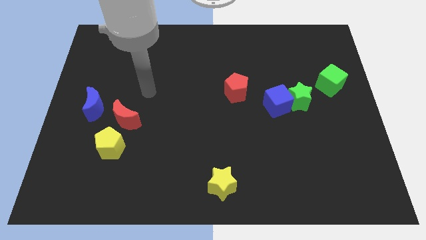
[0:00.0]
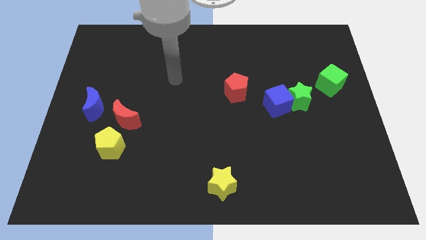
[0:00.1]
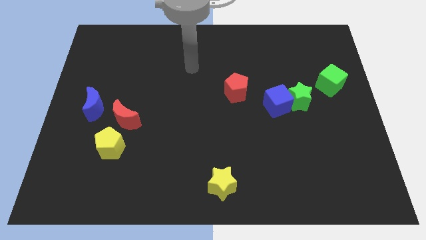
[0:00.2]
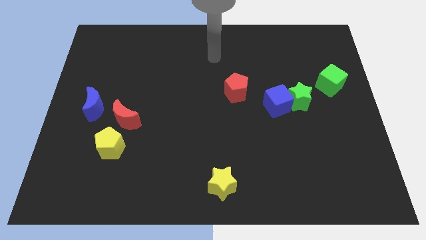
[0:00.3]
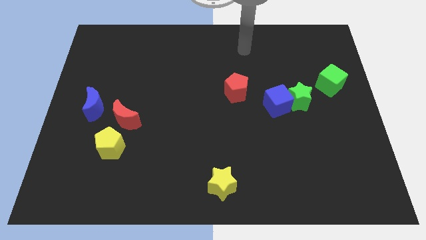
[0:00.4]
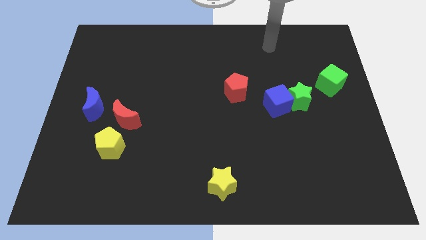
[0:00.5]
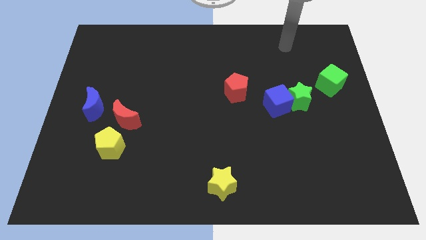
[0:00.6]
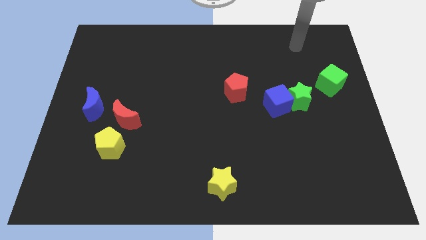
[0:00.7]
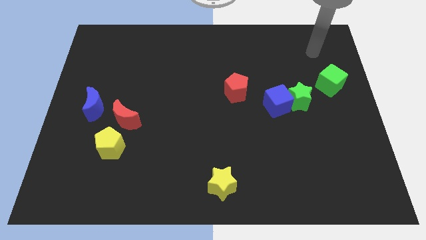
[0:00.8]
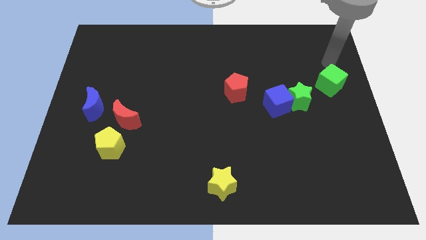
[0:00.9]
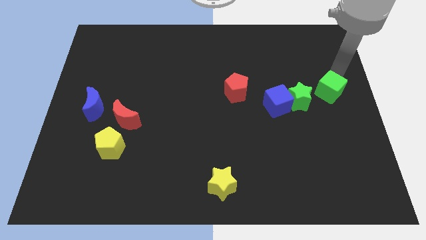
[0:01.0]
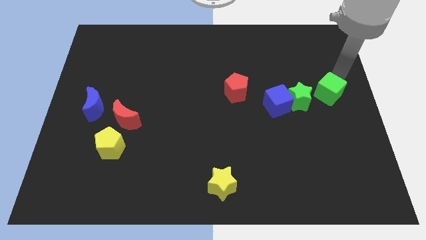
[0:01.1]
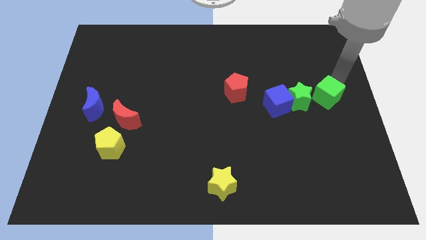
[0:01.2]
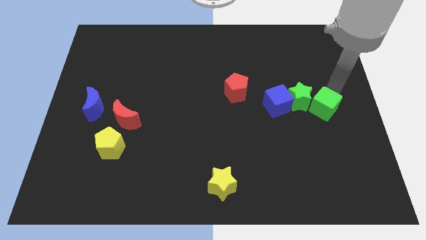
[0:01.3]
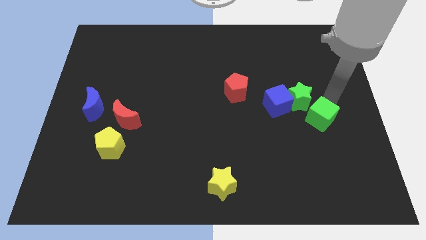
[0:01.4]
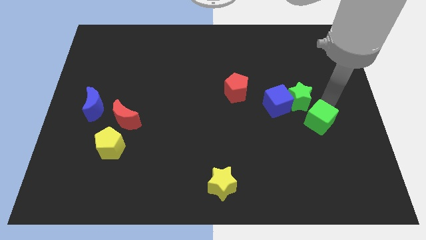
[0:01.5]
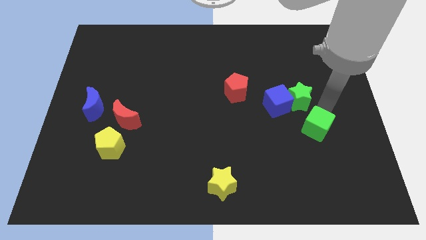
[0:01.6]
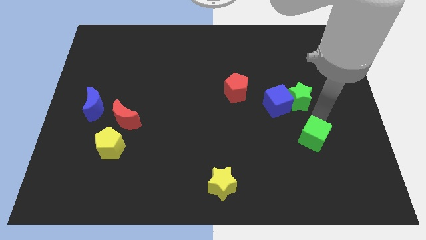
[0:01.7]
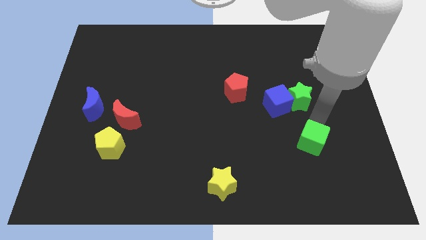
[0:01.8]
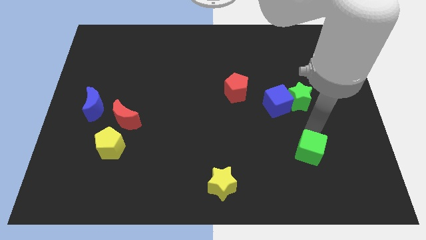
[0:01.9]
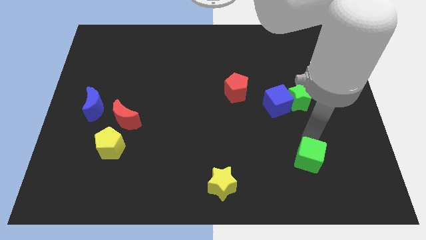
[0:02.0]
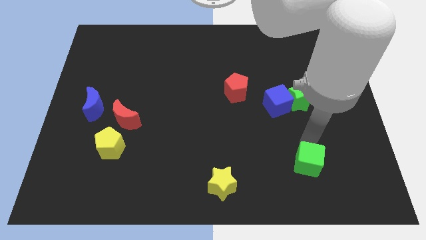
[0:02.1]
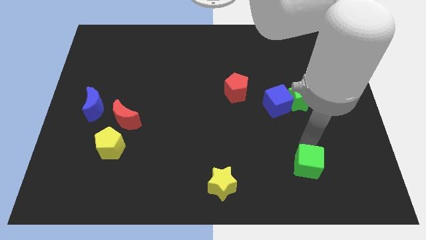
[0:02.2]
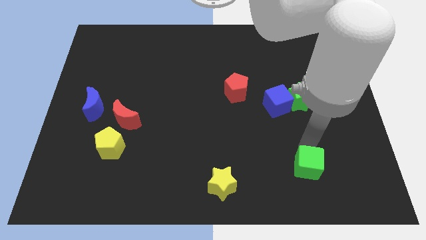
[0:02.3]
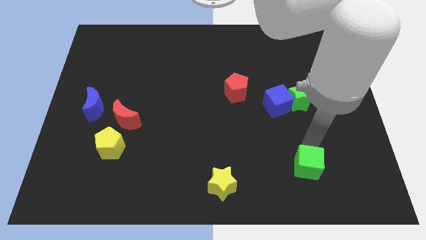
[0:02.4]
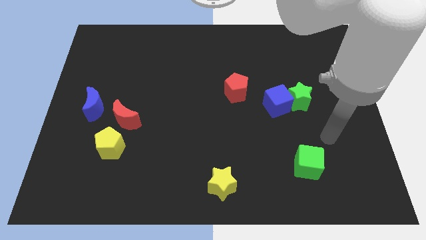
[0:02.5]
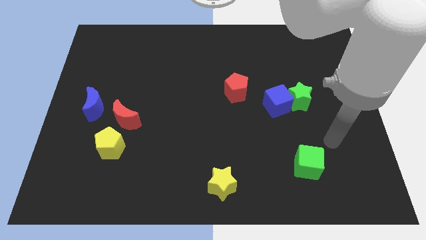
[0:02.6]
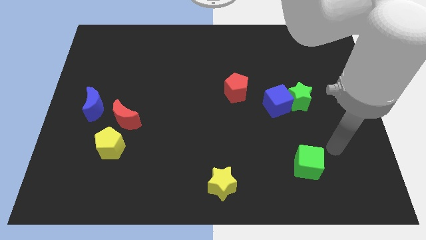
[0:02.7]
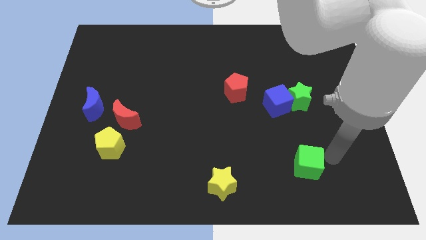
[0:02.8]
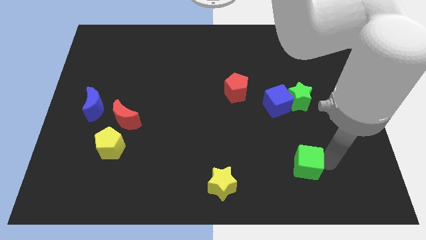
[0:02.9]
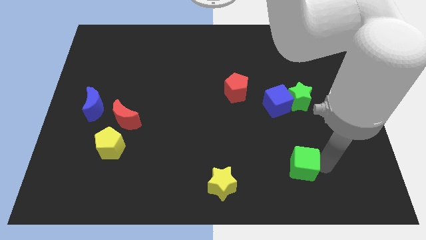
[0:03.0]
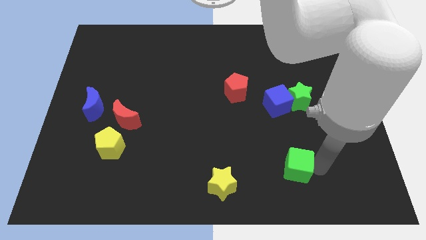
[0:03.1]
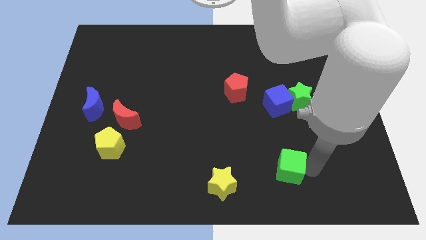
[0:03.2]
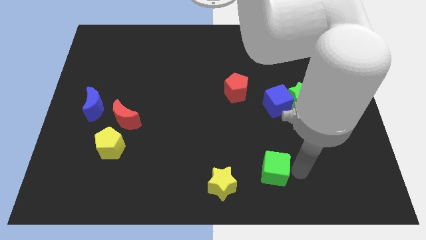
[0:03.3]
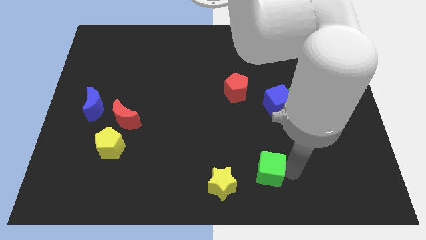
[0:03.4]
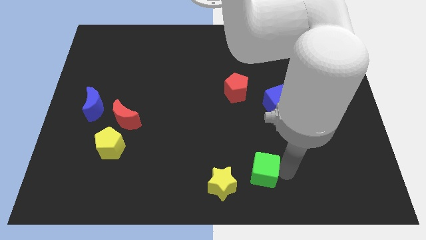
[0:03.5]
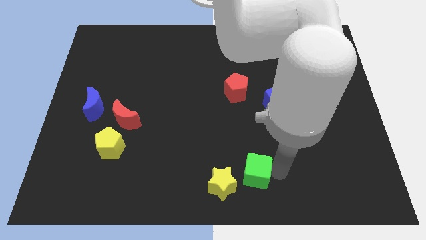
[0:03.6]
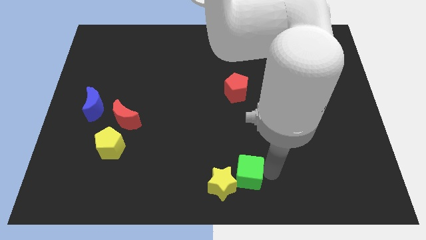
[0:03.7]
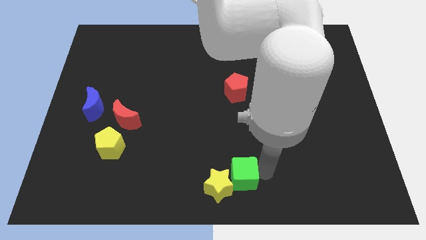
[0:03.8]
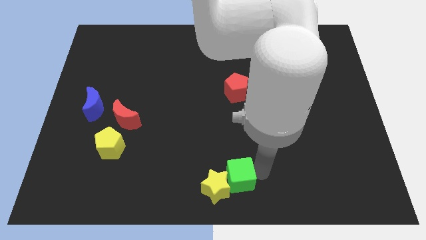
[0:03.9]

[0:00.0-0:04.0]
move the green cube next to the yellow star

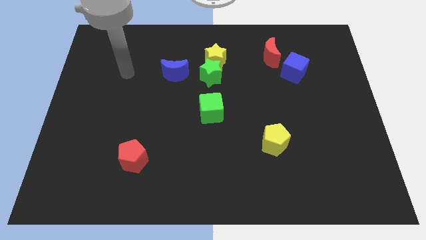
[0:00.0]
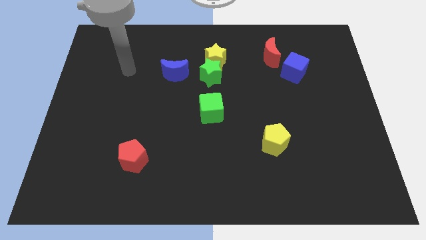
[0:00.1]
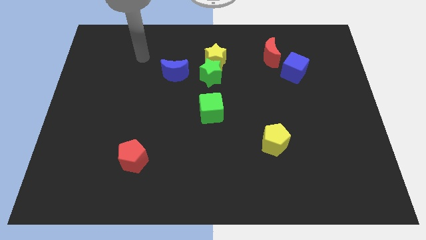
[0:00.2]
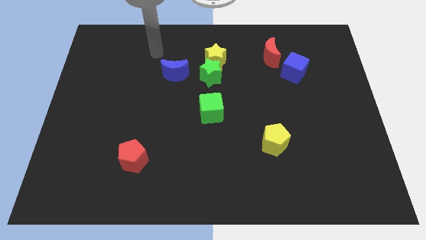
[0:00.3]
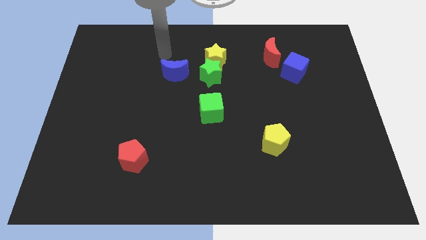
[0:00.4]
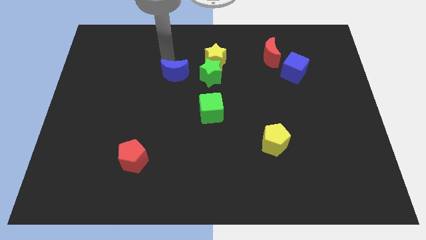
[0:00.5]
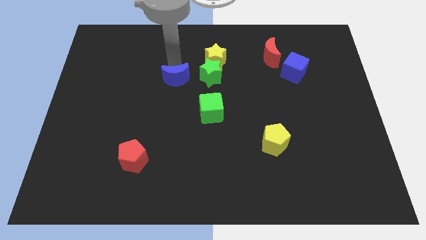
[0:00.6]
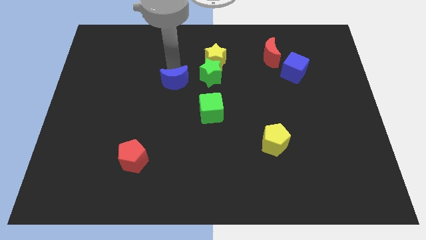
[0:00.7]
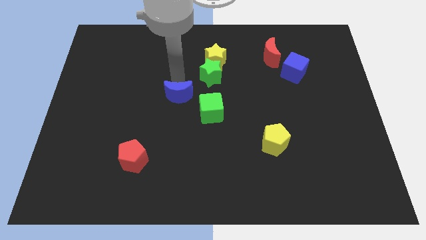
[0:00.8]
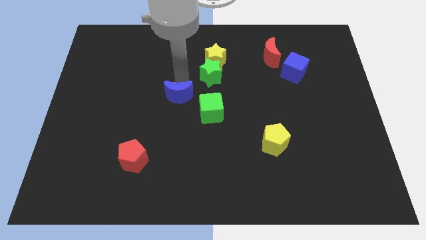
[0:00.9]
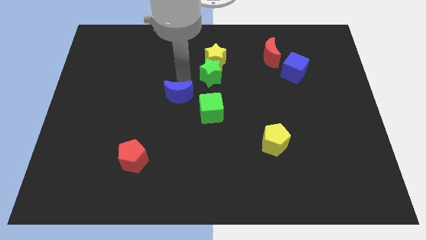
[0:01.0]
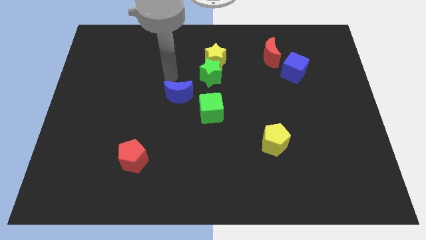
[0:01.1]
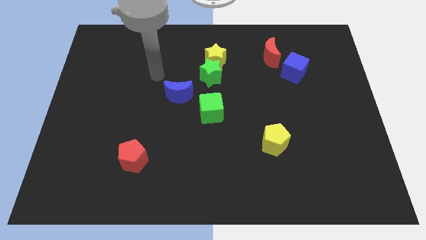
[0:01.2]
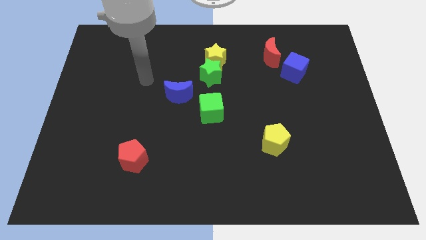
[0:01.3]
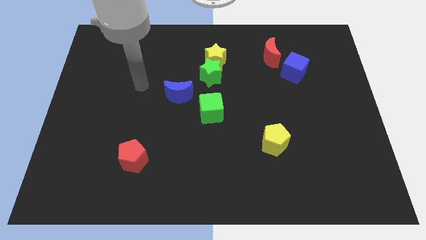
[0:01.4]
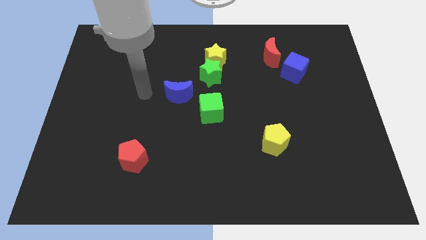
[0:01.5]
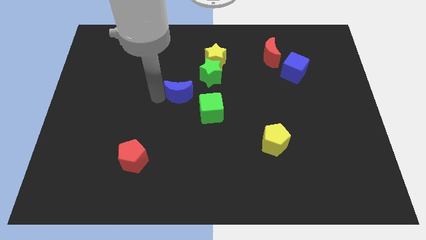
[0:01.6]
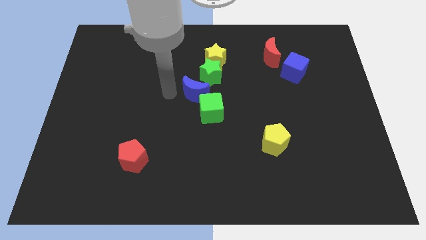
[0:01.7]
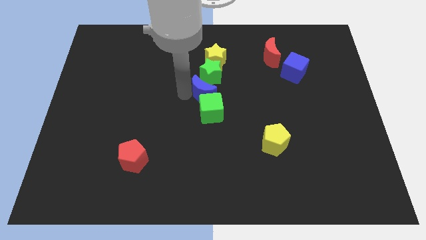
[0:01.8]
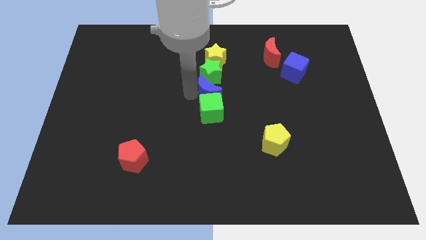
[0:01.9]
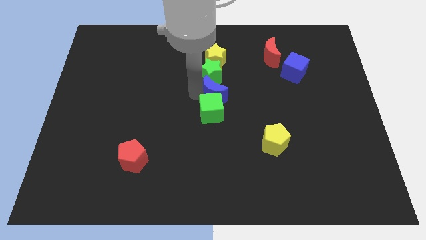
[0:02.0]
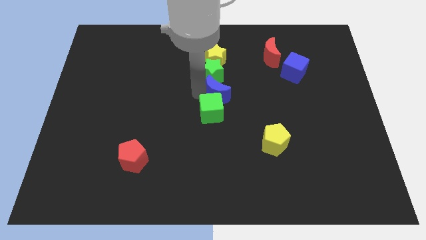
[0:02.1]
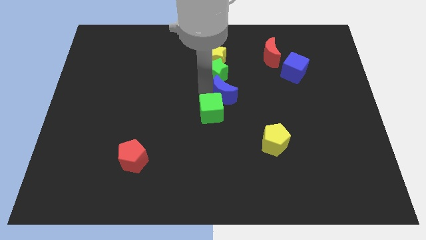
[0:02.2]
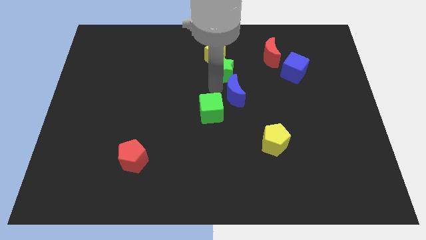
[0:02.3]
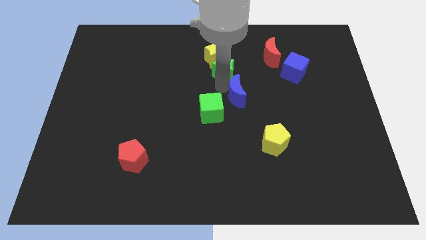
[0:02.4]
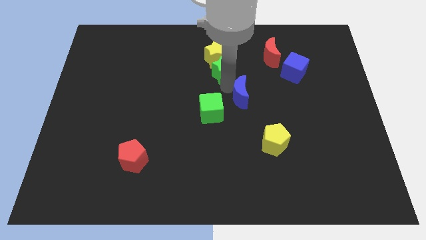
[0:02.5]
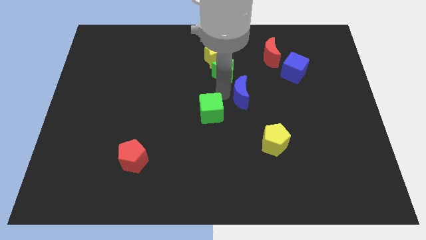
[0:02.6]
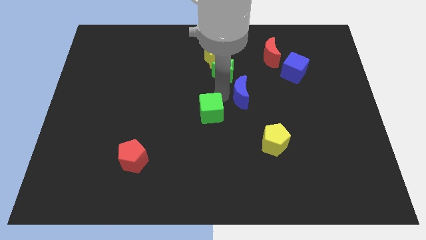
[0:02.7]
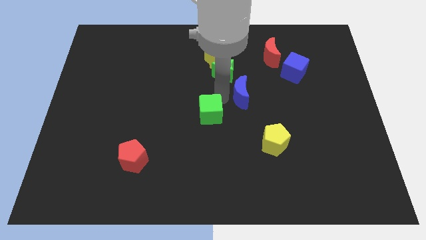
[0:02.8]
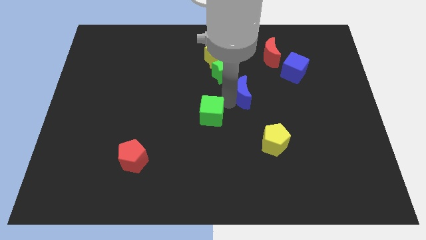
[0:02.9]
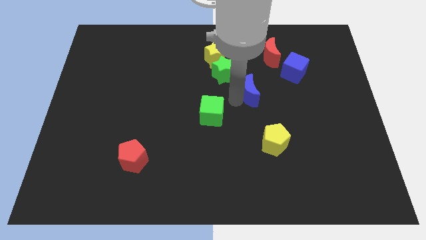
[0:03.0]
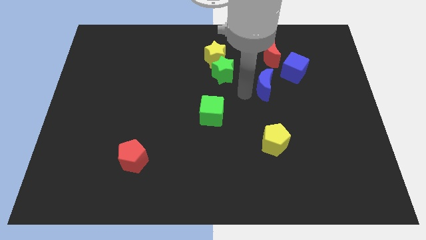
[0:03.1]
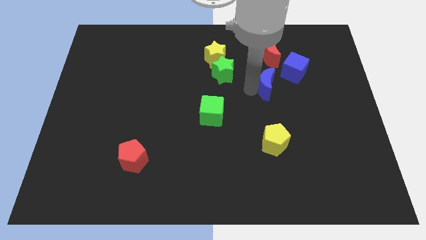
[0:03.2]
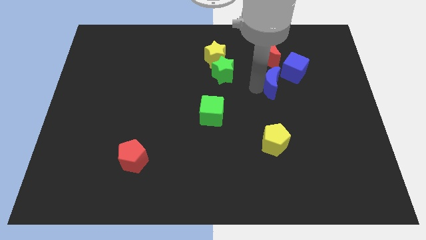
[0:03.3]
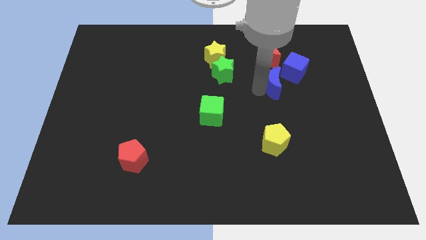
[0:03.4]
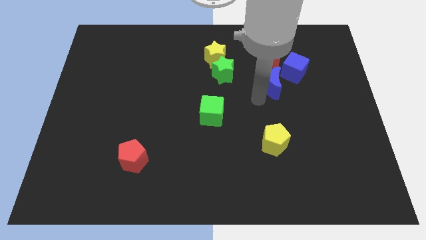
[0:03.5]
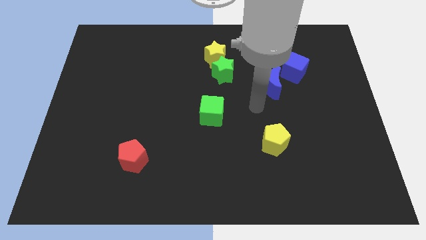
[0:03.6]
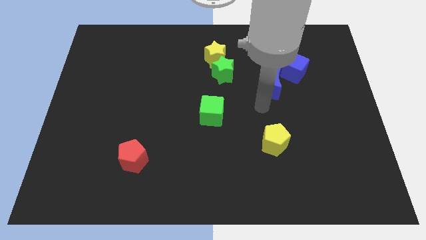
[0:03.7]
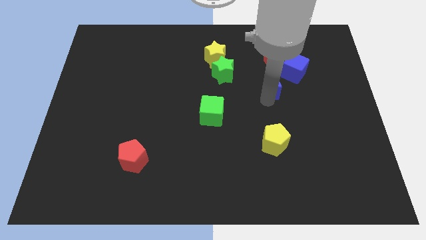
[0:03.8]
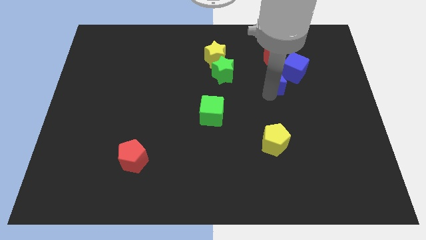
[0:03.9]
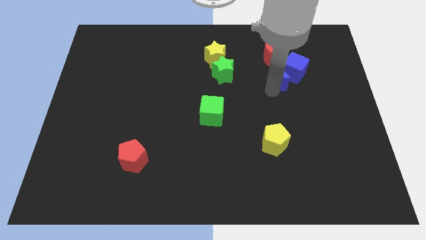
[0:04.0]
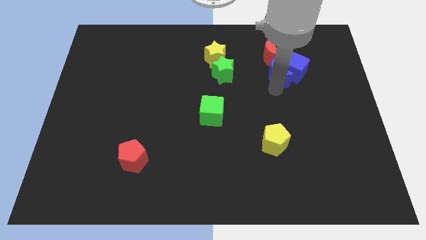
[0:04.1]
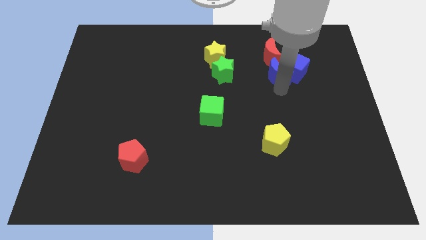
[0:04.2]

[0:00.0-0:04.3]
move the blue moon close to the blue cube

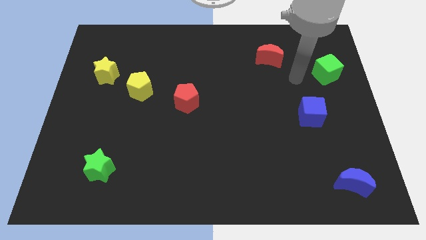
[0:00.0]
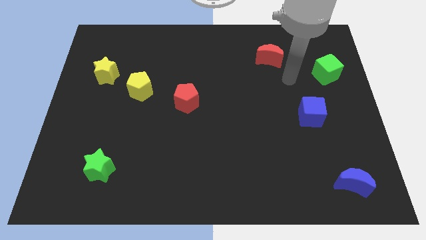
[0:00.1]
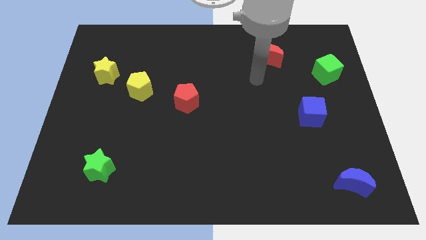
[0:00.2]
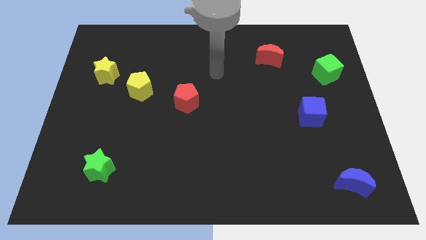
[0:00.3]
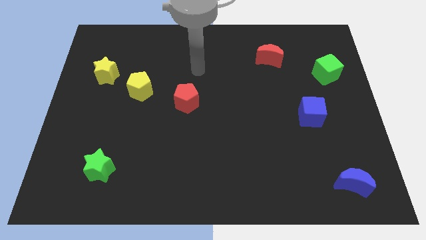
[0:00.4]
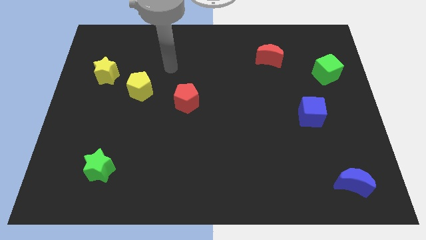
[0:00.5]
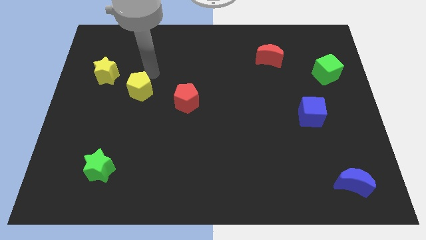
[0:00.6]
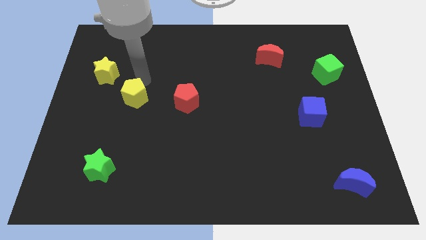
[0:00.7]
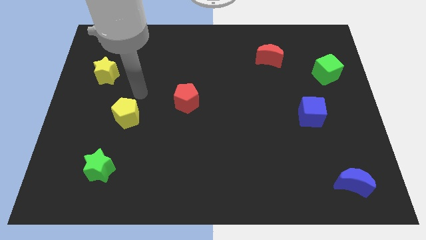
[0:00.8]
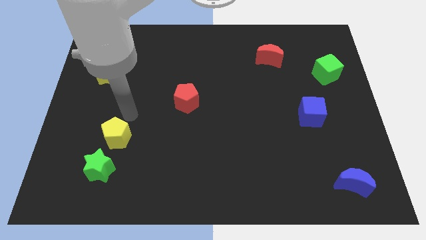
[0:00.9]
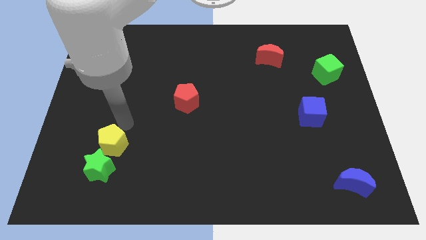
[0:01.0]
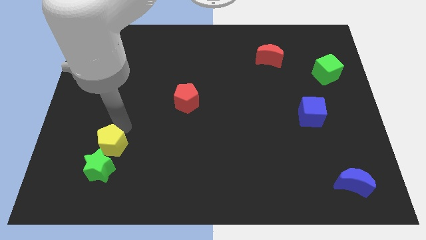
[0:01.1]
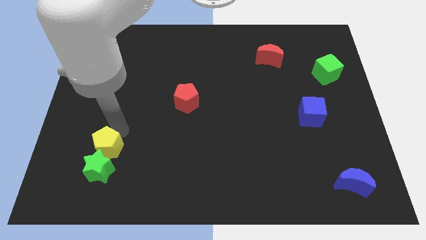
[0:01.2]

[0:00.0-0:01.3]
slide the yellow pentagon to the green star
